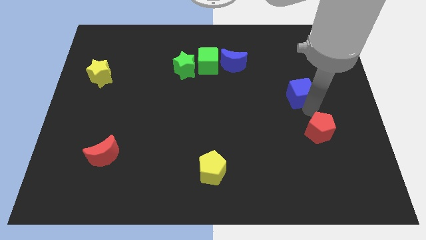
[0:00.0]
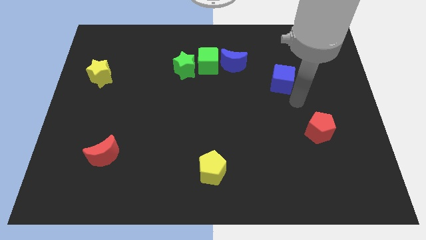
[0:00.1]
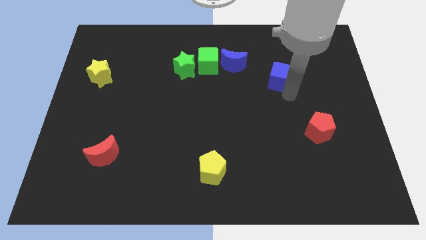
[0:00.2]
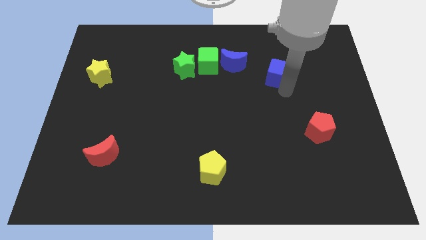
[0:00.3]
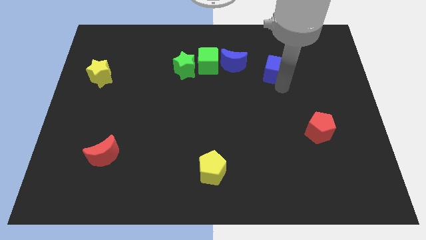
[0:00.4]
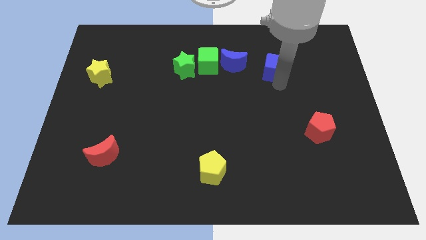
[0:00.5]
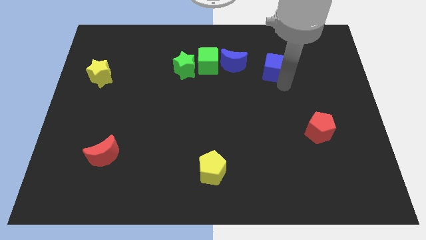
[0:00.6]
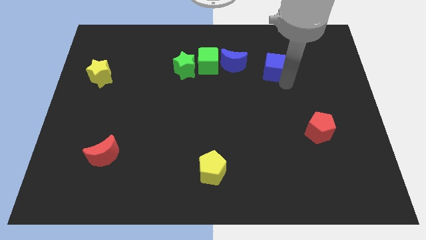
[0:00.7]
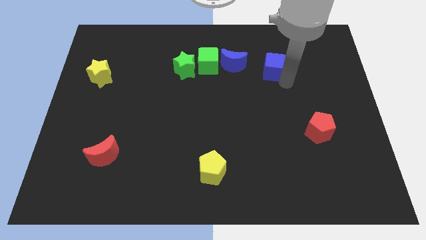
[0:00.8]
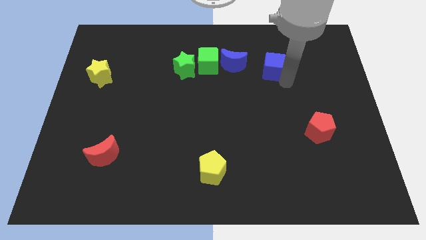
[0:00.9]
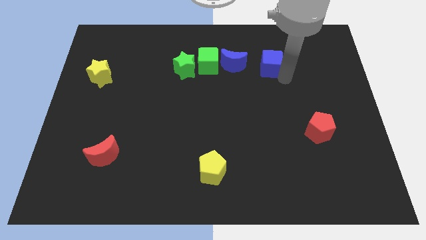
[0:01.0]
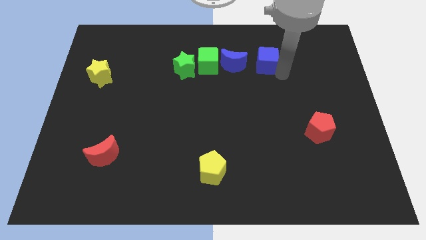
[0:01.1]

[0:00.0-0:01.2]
place the blue cube right to the blue moon

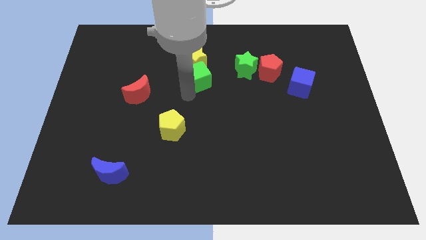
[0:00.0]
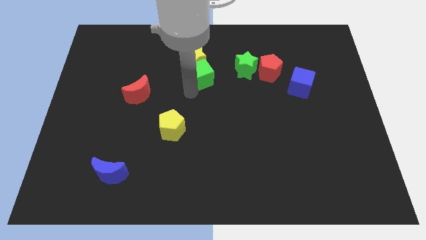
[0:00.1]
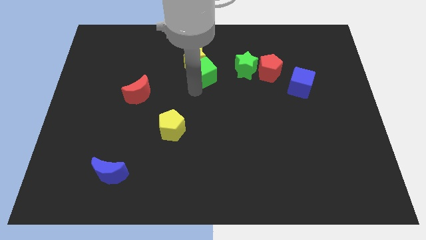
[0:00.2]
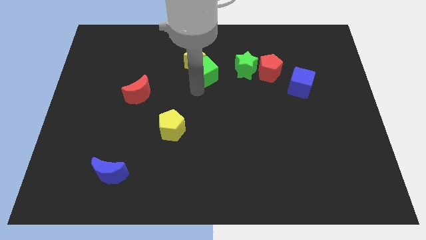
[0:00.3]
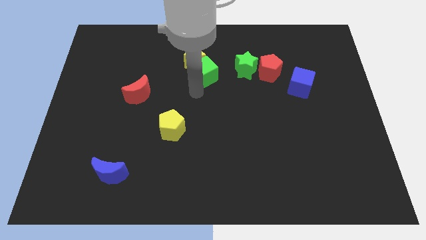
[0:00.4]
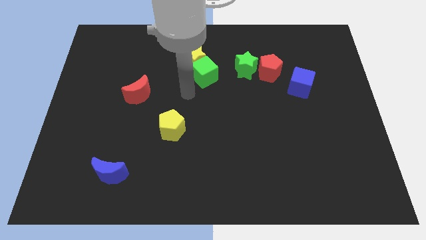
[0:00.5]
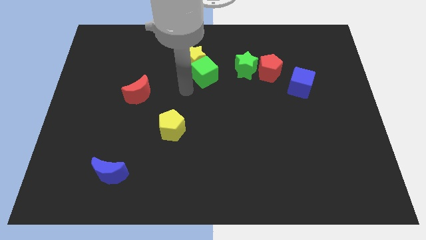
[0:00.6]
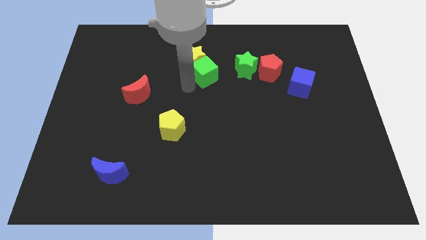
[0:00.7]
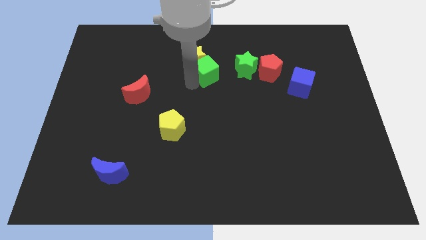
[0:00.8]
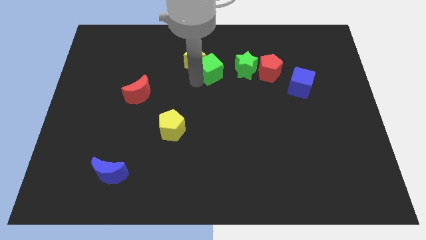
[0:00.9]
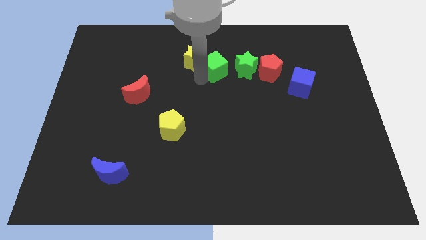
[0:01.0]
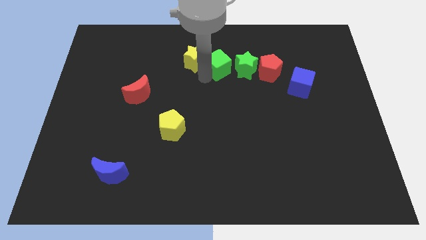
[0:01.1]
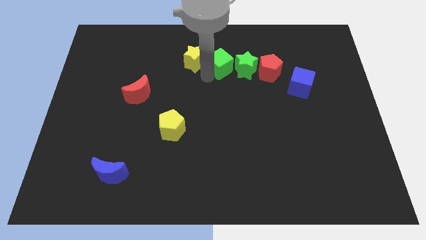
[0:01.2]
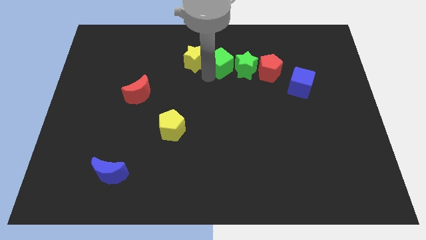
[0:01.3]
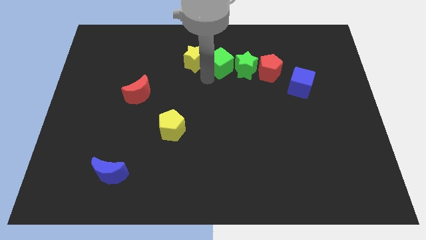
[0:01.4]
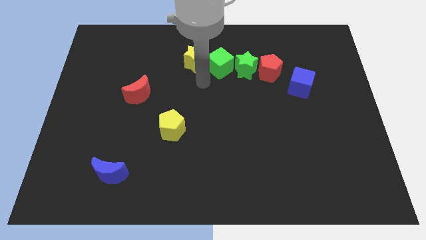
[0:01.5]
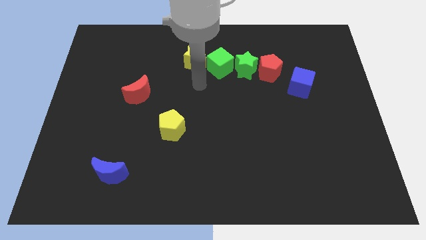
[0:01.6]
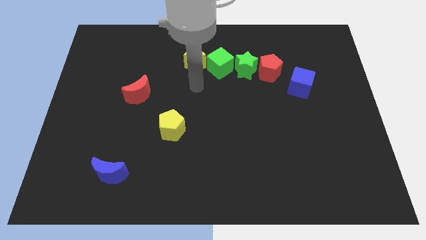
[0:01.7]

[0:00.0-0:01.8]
put the green cube left to the green star

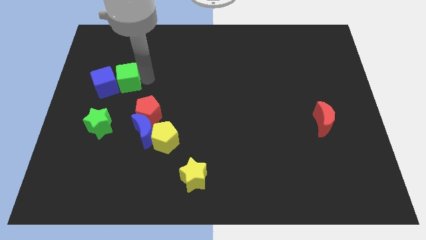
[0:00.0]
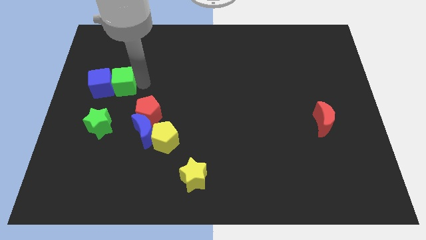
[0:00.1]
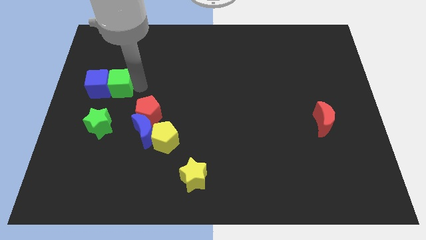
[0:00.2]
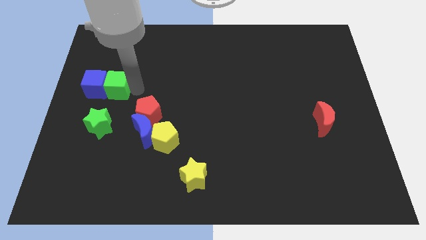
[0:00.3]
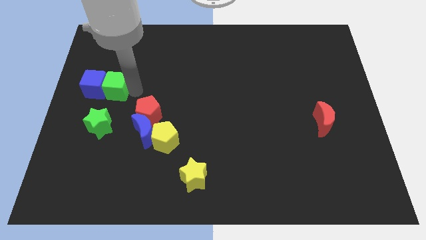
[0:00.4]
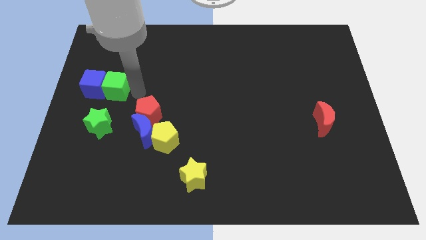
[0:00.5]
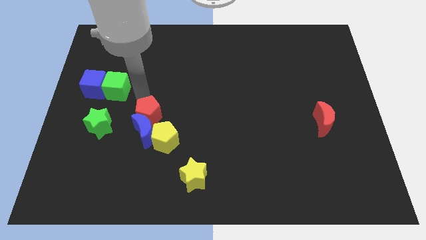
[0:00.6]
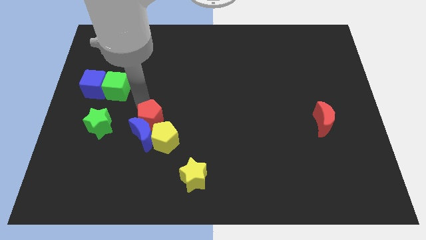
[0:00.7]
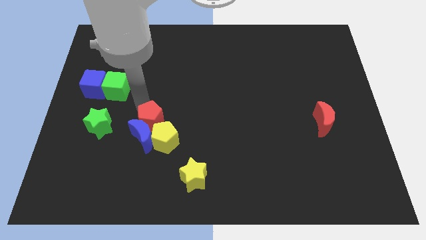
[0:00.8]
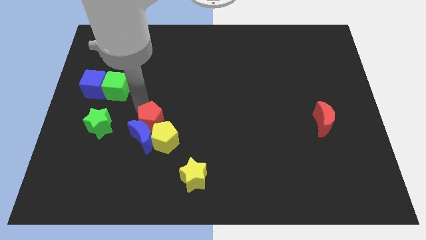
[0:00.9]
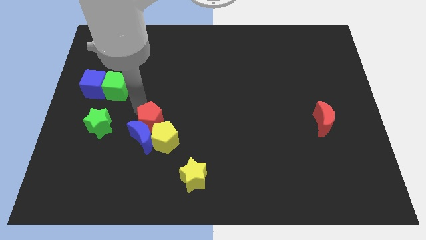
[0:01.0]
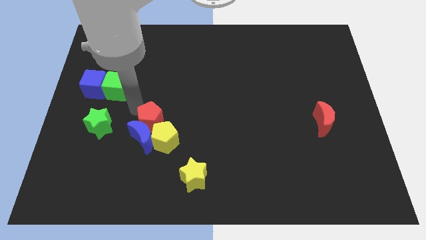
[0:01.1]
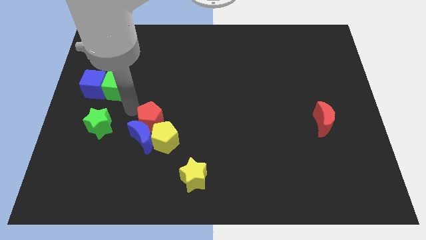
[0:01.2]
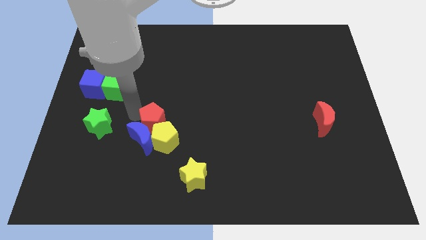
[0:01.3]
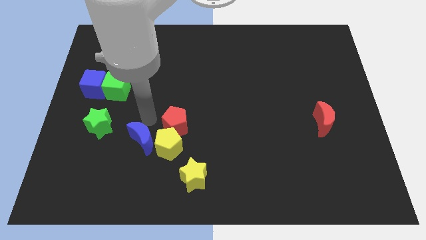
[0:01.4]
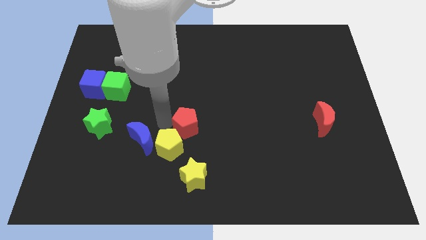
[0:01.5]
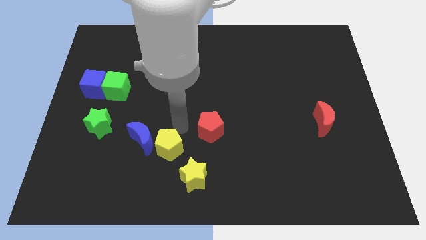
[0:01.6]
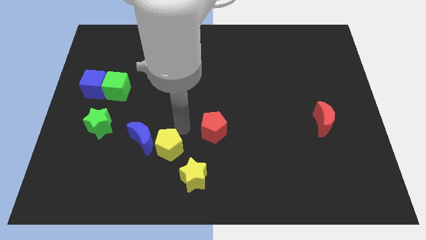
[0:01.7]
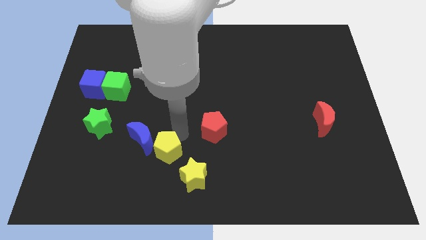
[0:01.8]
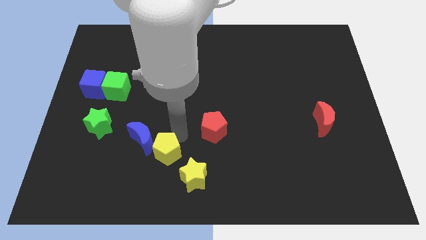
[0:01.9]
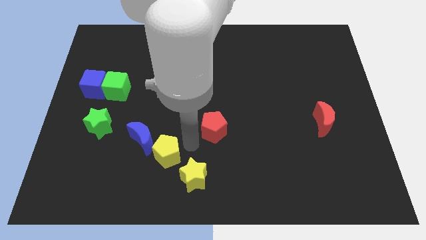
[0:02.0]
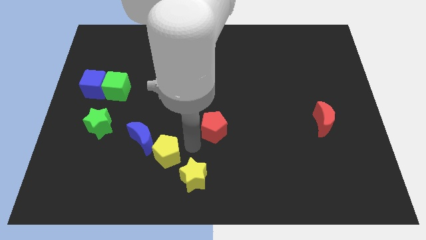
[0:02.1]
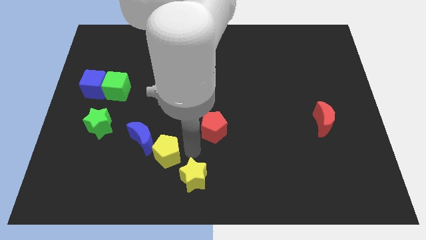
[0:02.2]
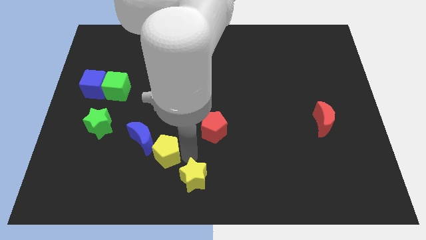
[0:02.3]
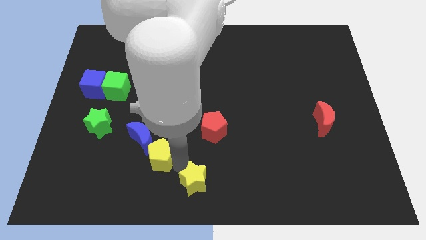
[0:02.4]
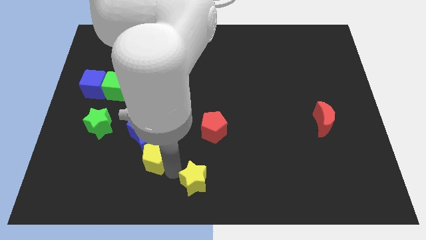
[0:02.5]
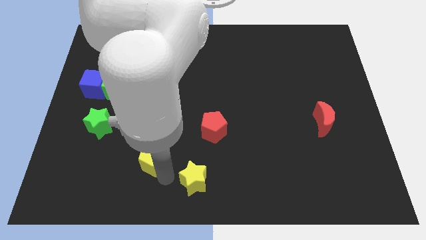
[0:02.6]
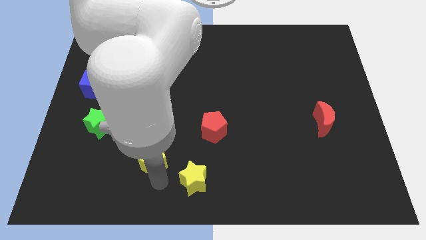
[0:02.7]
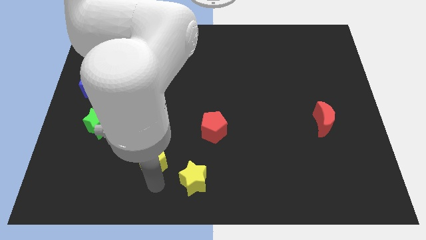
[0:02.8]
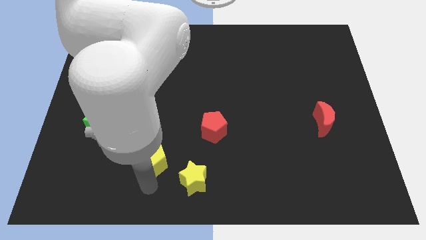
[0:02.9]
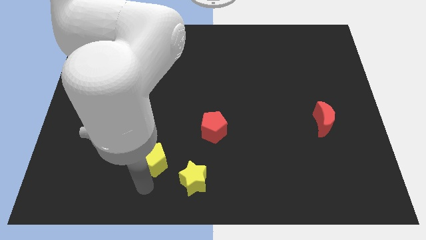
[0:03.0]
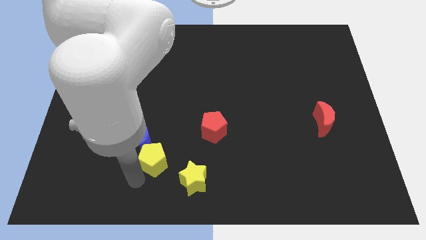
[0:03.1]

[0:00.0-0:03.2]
separate the red pentagon from the yellow pentagon

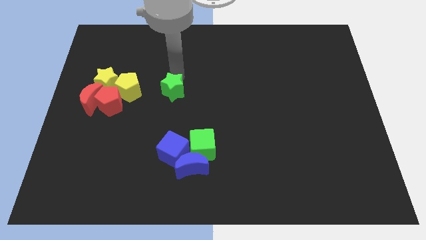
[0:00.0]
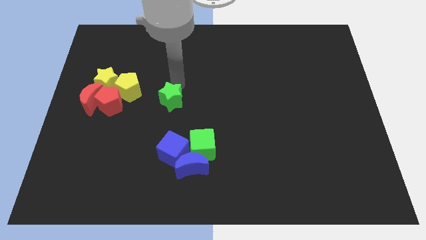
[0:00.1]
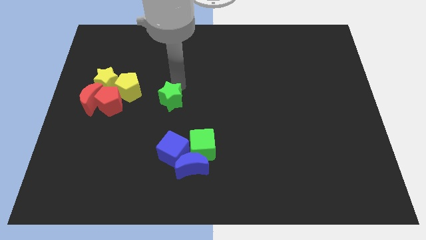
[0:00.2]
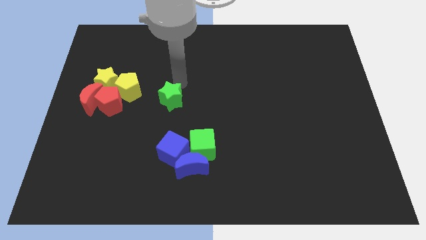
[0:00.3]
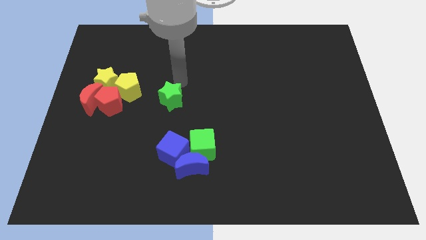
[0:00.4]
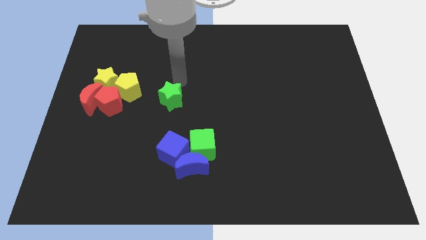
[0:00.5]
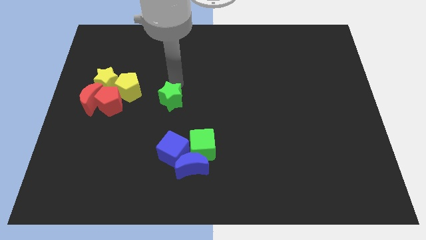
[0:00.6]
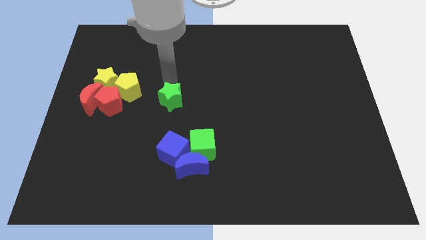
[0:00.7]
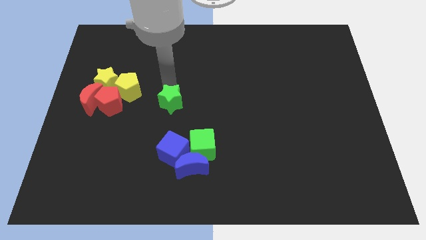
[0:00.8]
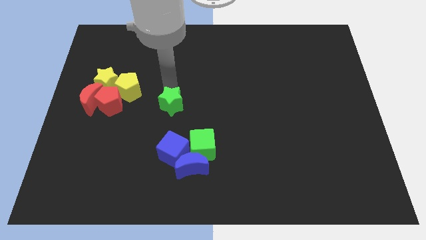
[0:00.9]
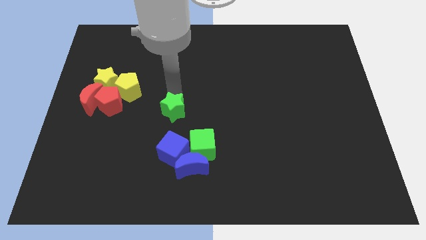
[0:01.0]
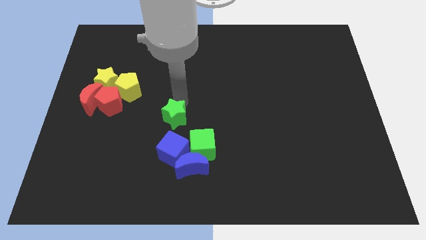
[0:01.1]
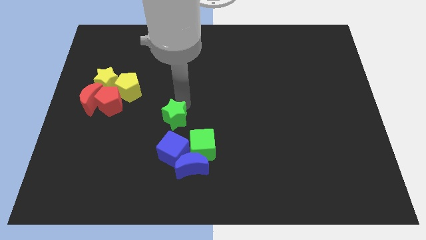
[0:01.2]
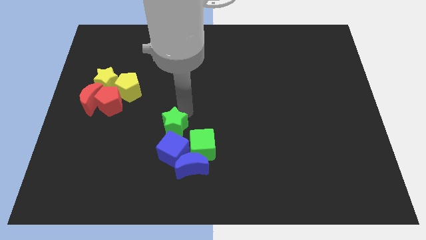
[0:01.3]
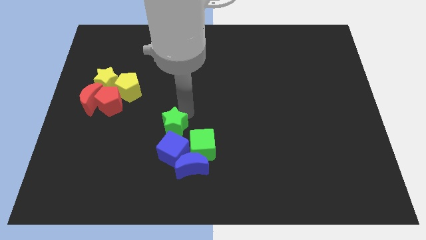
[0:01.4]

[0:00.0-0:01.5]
push the green star to the top of the blue cube

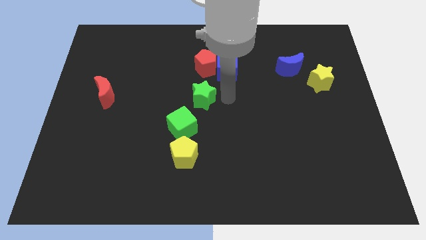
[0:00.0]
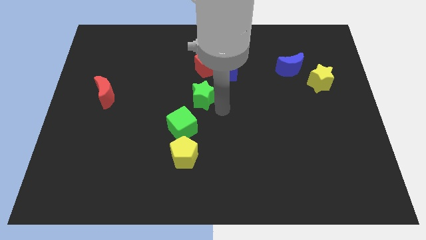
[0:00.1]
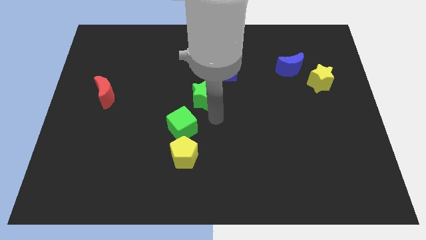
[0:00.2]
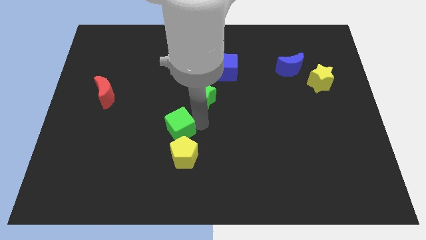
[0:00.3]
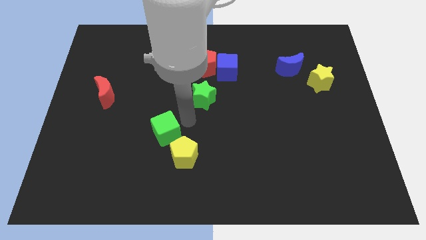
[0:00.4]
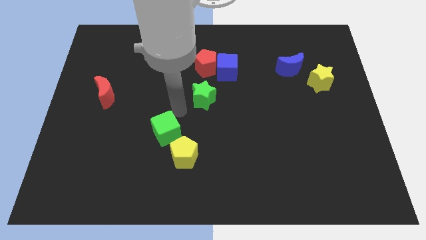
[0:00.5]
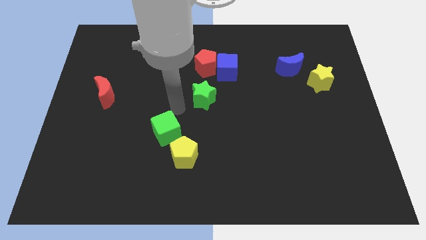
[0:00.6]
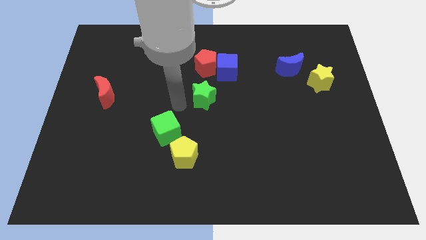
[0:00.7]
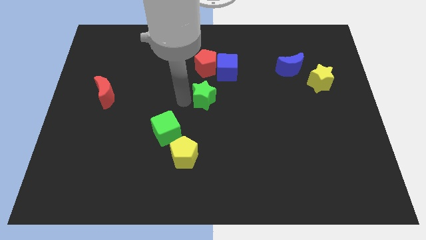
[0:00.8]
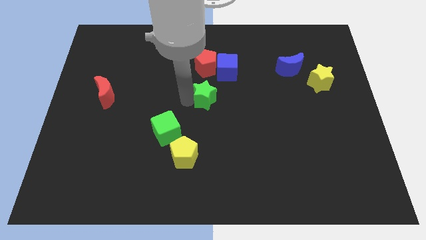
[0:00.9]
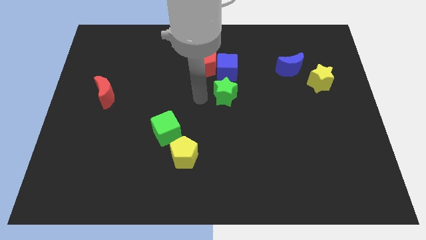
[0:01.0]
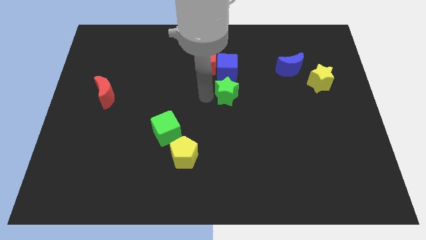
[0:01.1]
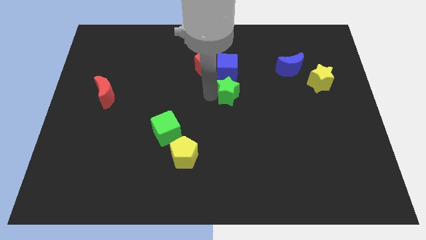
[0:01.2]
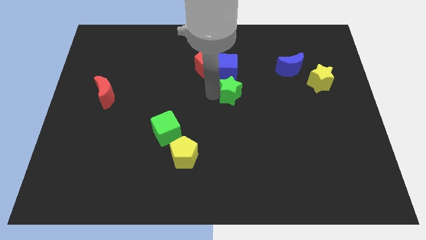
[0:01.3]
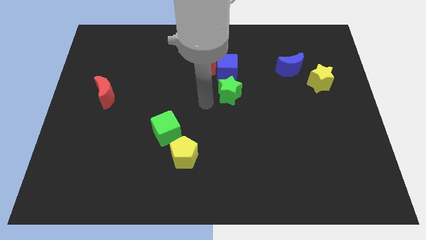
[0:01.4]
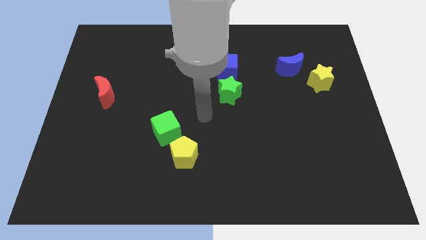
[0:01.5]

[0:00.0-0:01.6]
put the green star at the bottom of the blue cube
